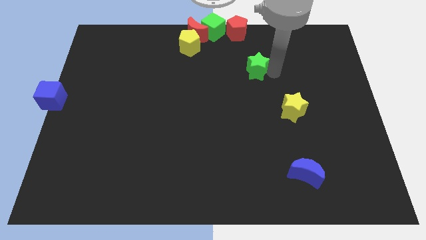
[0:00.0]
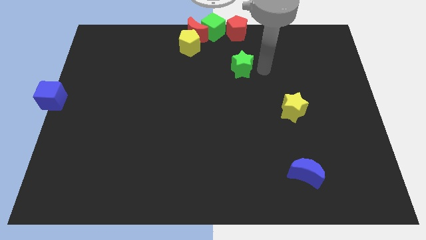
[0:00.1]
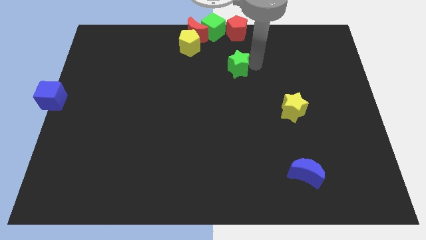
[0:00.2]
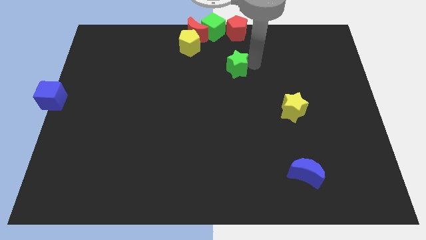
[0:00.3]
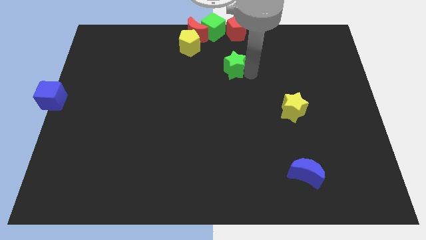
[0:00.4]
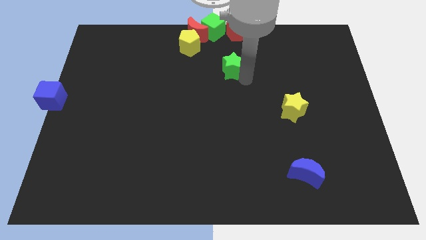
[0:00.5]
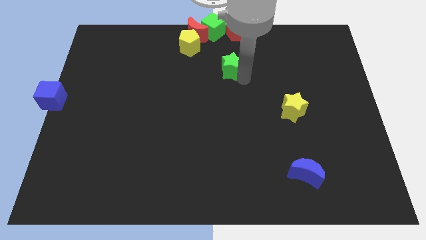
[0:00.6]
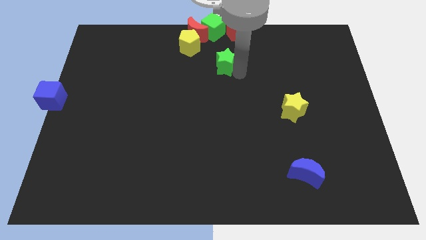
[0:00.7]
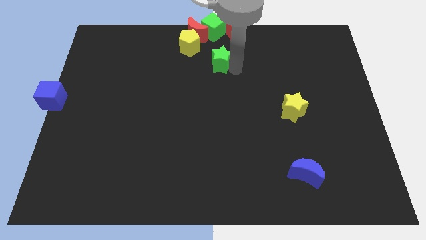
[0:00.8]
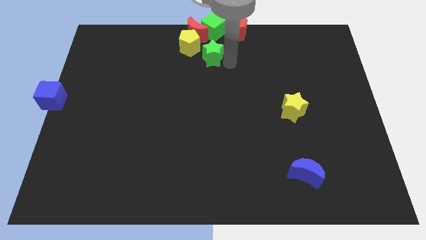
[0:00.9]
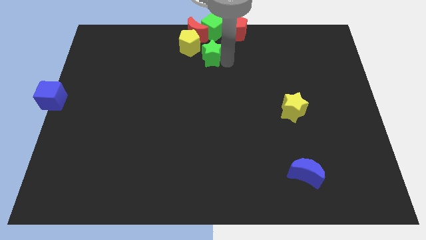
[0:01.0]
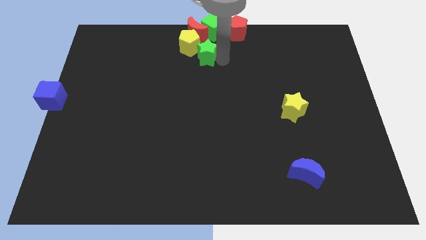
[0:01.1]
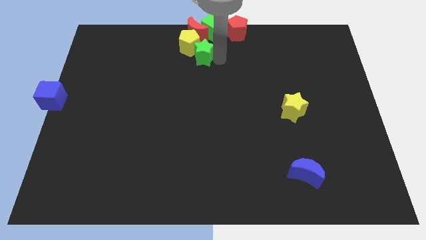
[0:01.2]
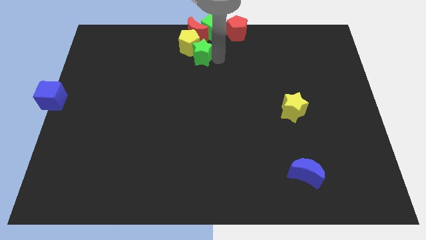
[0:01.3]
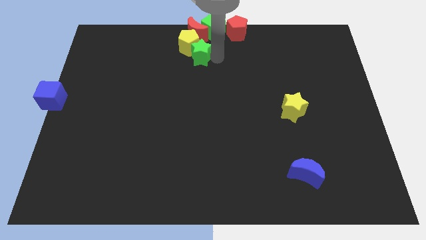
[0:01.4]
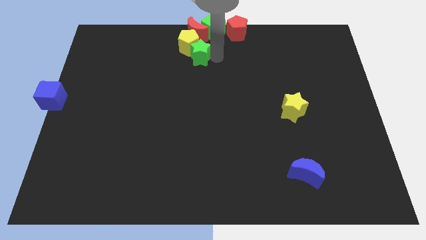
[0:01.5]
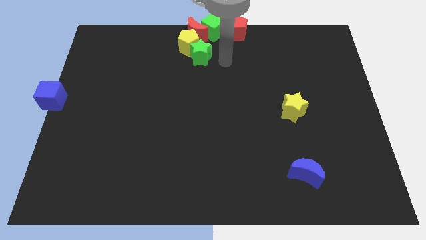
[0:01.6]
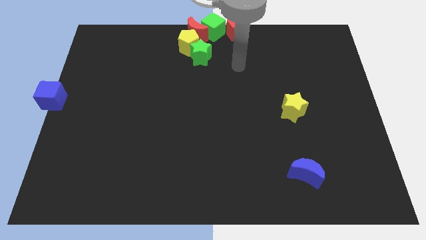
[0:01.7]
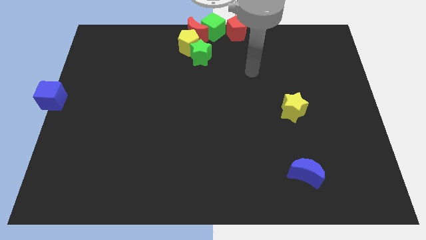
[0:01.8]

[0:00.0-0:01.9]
move the green star into the yellow pentagon

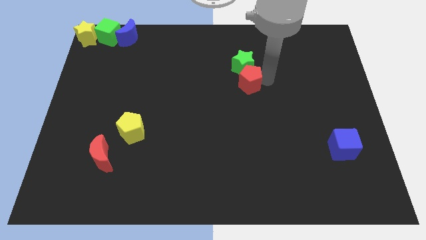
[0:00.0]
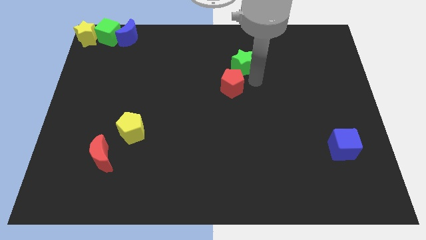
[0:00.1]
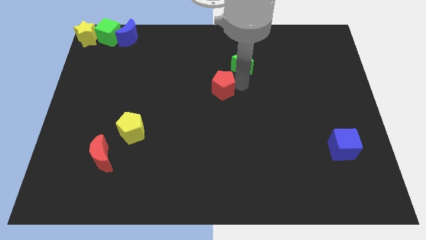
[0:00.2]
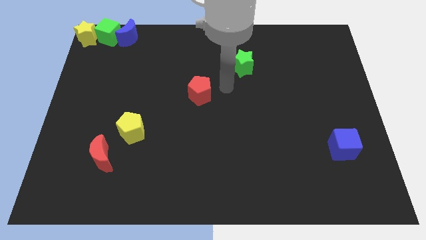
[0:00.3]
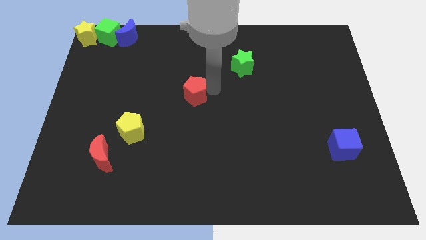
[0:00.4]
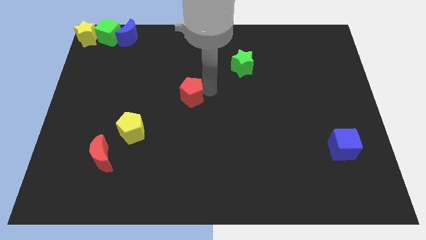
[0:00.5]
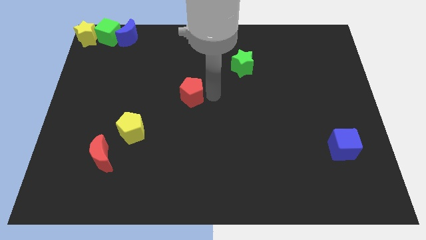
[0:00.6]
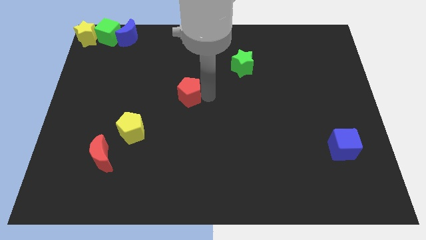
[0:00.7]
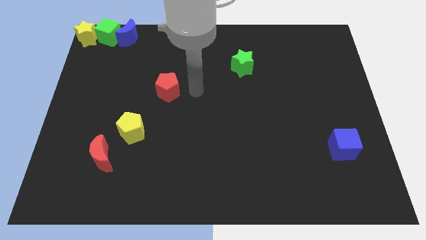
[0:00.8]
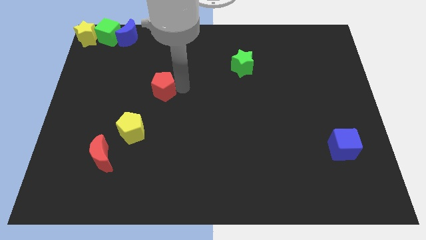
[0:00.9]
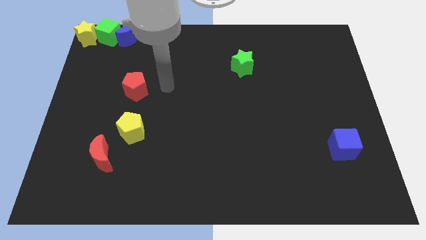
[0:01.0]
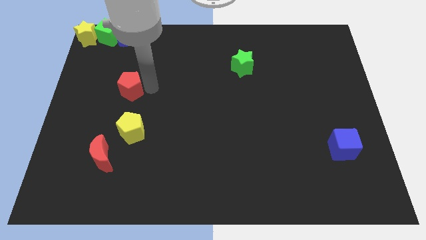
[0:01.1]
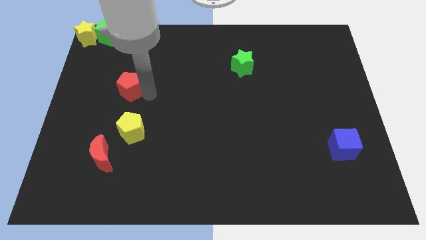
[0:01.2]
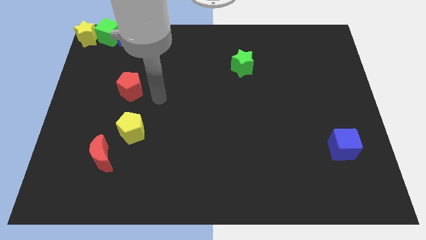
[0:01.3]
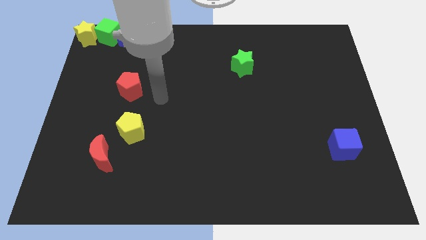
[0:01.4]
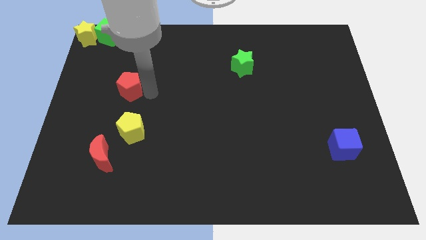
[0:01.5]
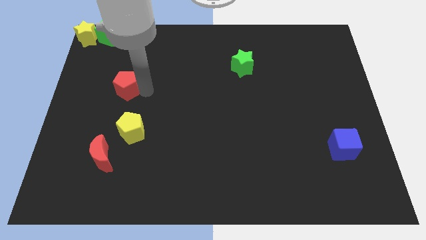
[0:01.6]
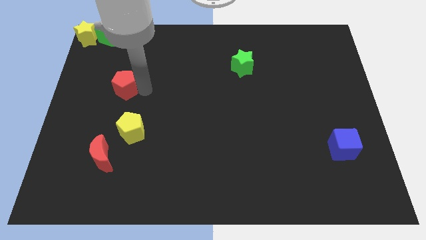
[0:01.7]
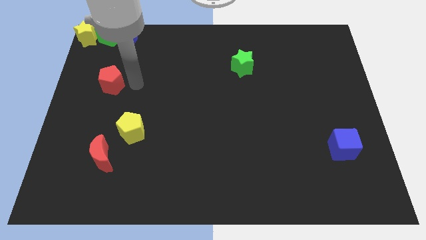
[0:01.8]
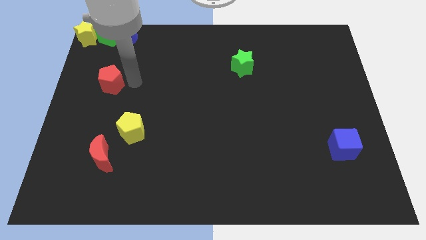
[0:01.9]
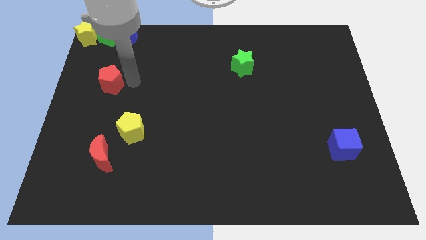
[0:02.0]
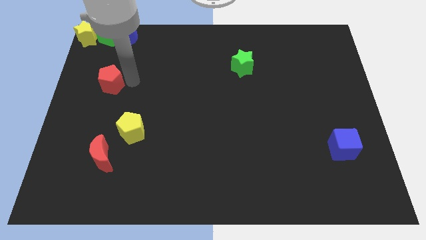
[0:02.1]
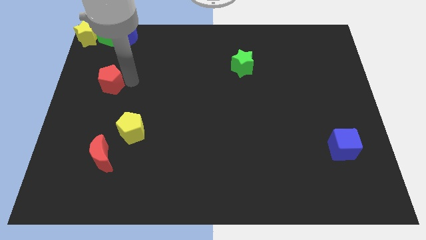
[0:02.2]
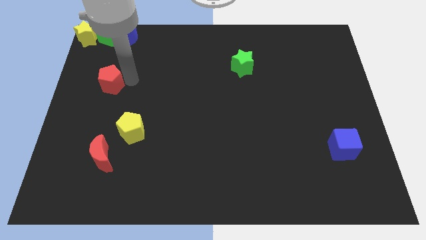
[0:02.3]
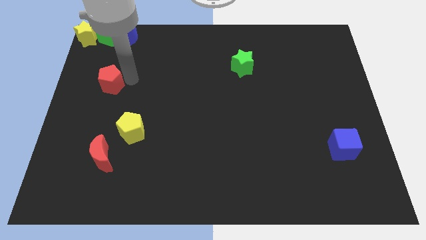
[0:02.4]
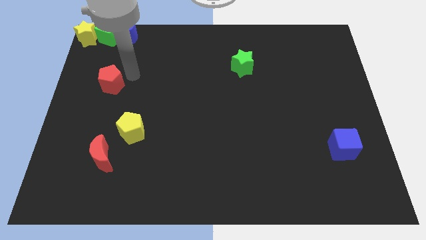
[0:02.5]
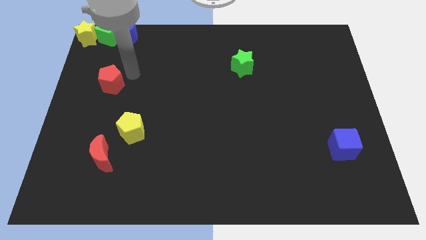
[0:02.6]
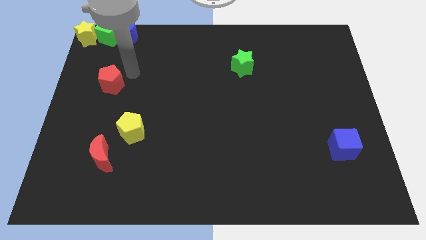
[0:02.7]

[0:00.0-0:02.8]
move the red pentagon vertical to the green cube

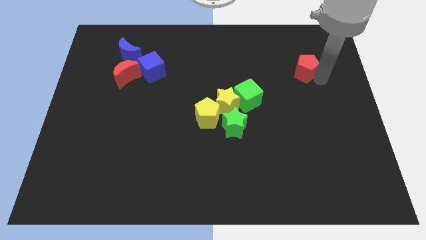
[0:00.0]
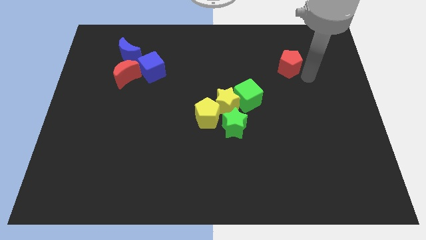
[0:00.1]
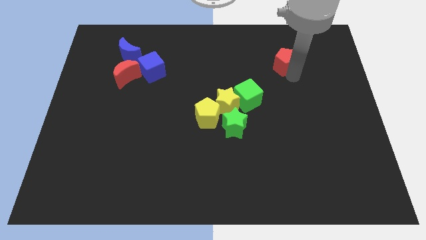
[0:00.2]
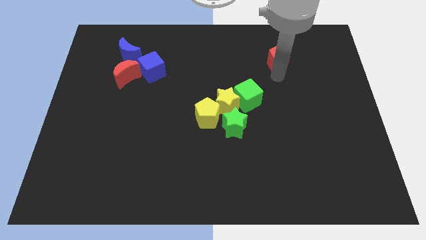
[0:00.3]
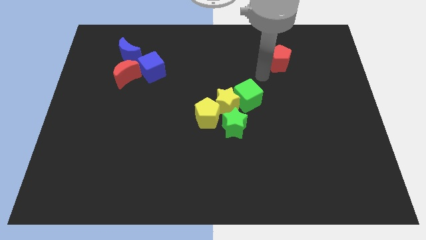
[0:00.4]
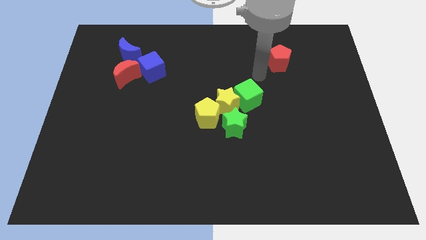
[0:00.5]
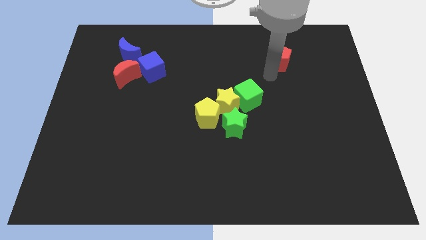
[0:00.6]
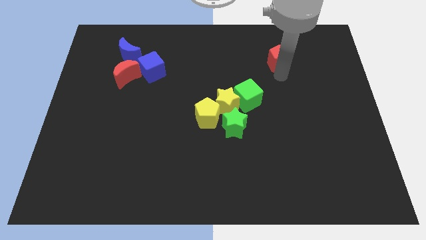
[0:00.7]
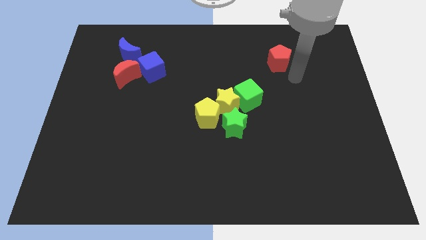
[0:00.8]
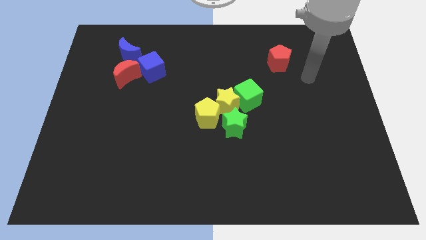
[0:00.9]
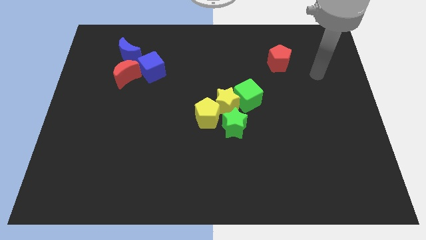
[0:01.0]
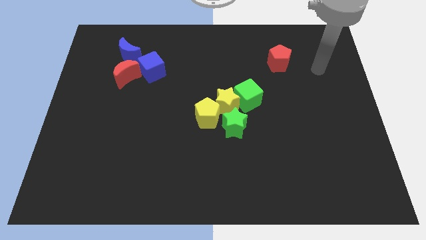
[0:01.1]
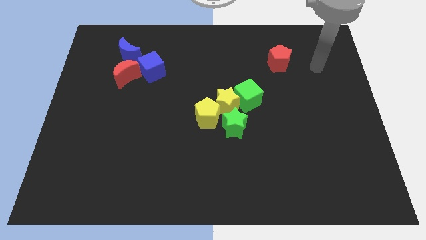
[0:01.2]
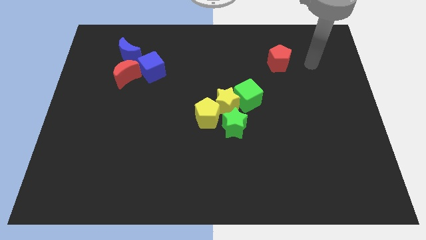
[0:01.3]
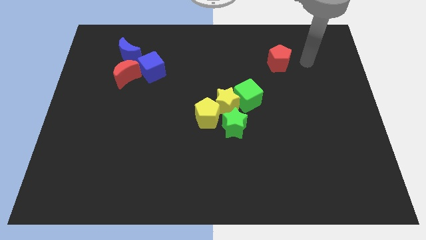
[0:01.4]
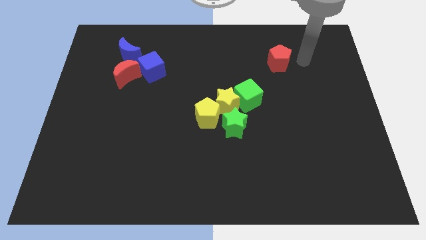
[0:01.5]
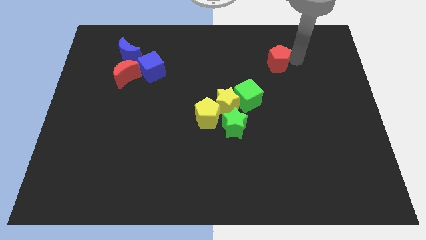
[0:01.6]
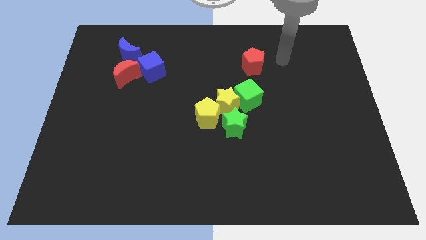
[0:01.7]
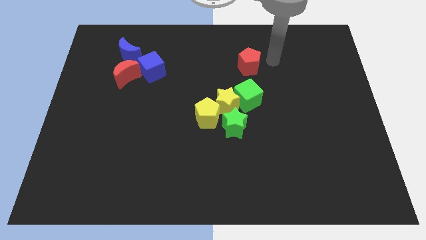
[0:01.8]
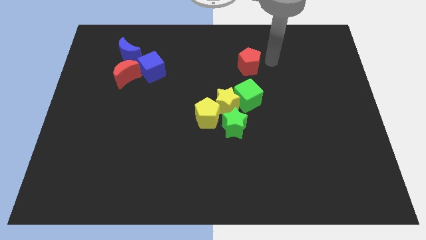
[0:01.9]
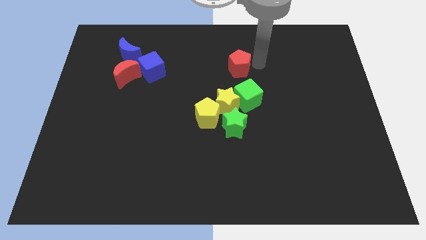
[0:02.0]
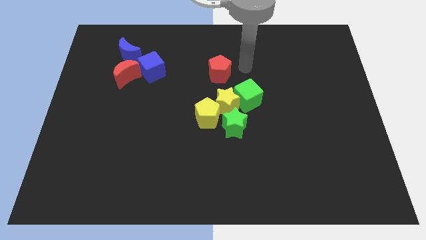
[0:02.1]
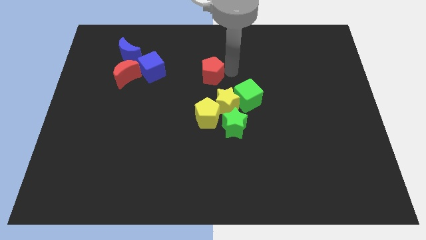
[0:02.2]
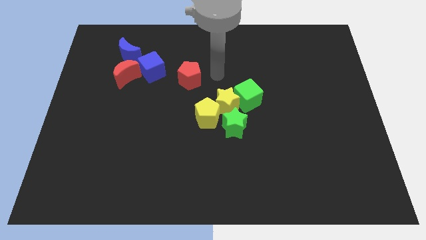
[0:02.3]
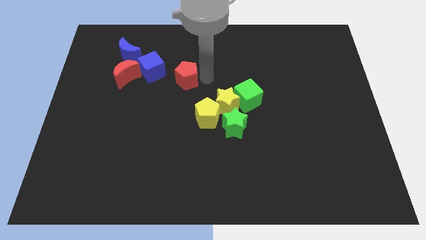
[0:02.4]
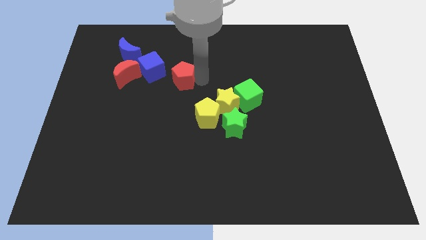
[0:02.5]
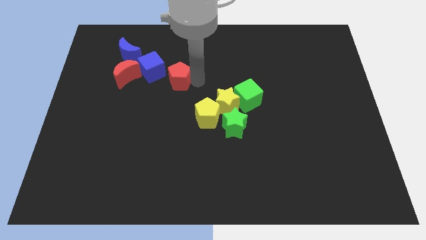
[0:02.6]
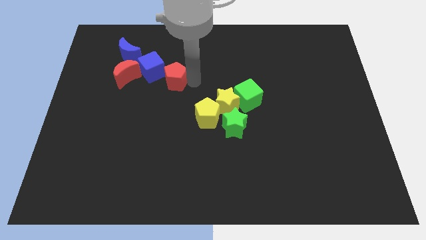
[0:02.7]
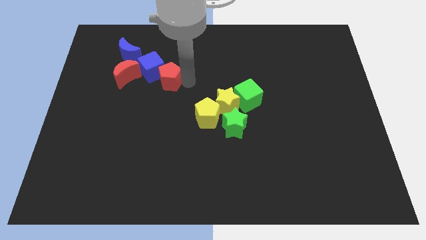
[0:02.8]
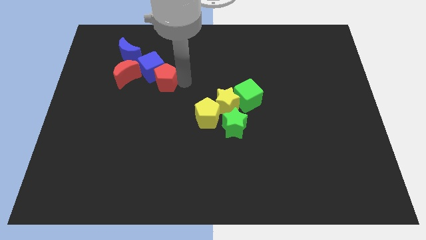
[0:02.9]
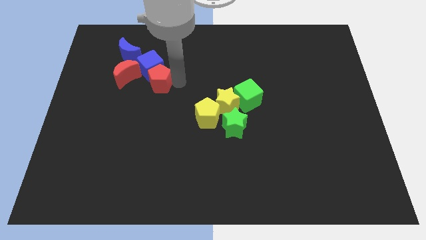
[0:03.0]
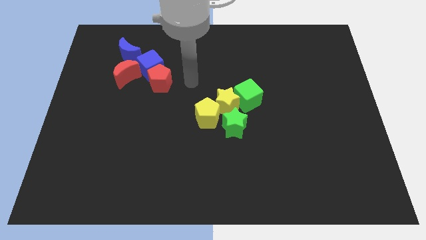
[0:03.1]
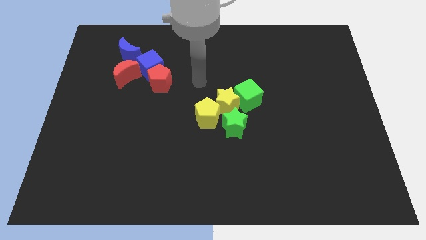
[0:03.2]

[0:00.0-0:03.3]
place the red pentagon below to the blue cube

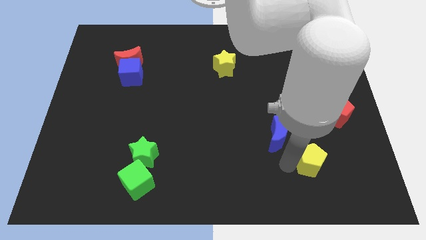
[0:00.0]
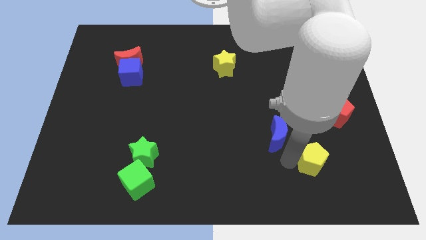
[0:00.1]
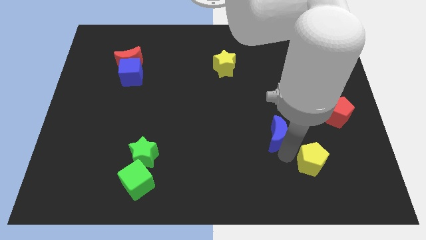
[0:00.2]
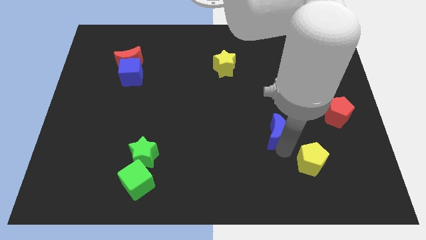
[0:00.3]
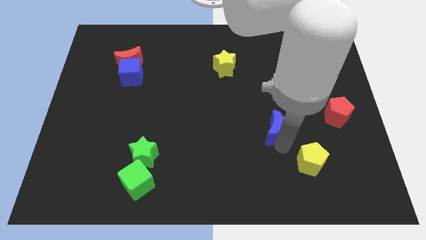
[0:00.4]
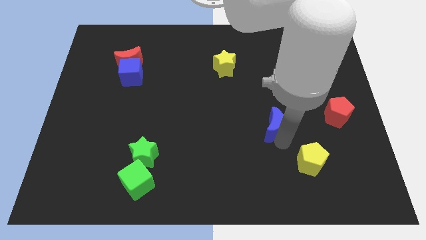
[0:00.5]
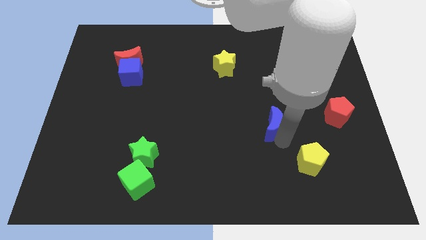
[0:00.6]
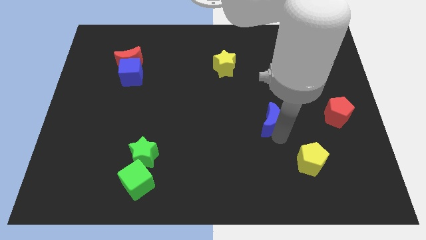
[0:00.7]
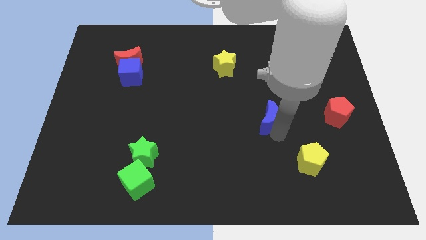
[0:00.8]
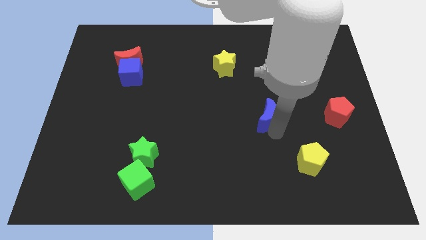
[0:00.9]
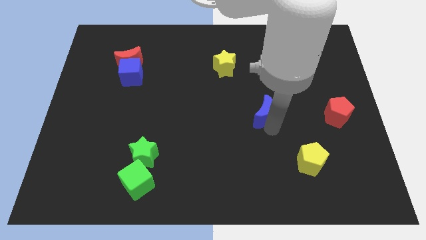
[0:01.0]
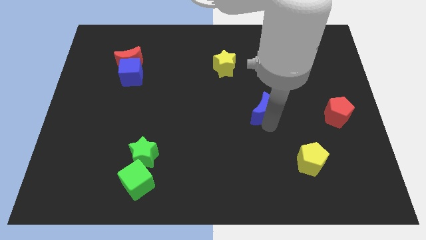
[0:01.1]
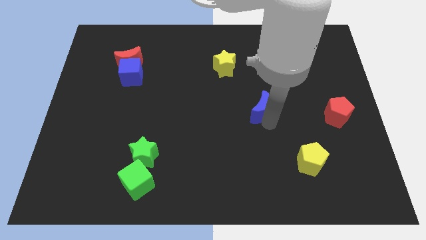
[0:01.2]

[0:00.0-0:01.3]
place blue moon adjacent to the red pentagon
